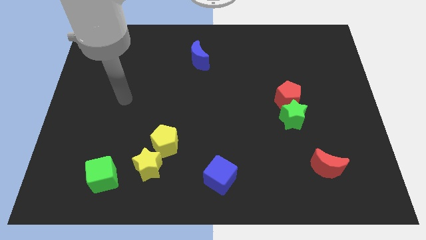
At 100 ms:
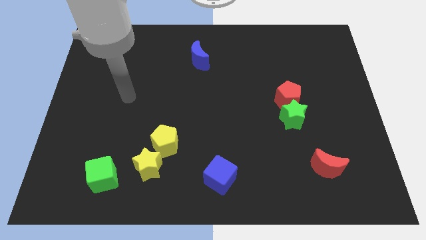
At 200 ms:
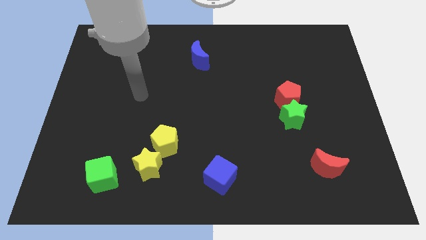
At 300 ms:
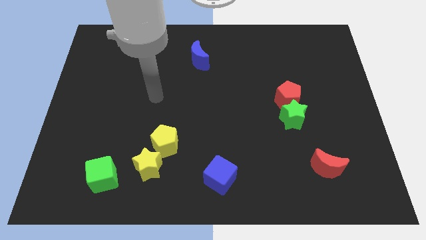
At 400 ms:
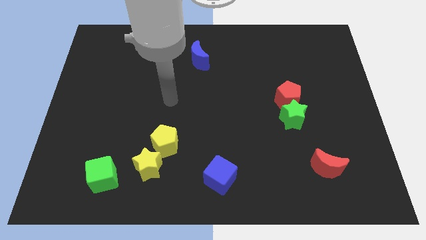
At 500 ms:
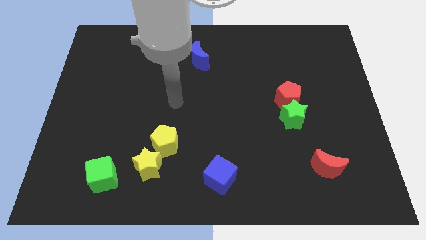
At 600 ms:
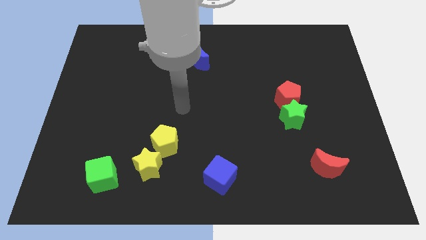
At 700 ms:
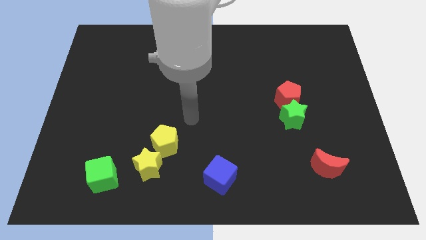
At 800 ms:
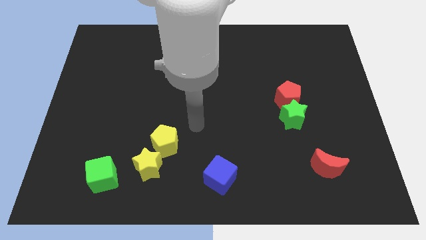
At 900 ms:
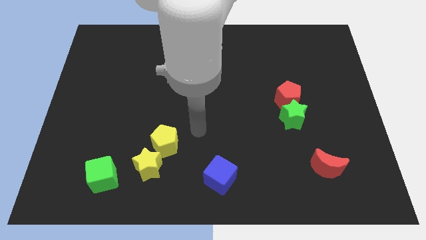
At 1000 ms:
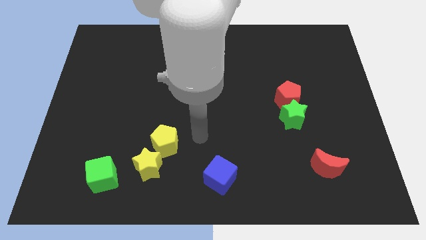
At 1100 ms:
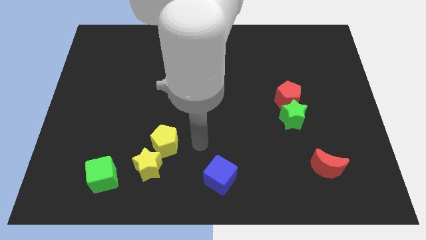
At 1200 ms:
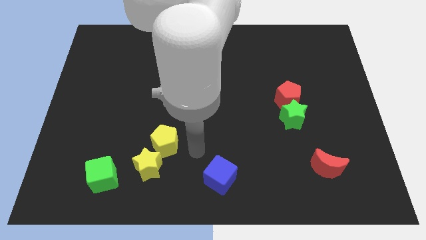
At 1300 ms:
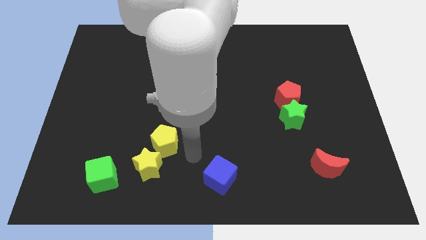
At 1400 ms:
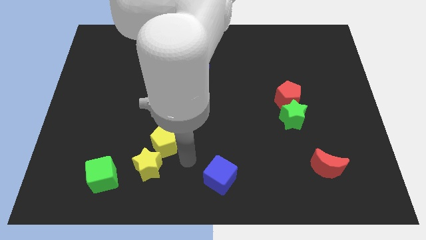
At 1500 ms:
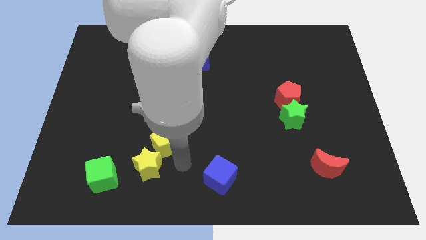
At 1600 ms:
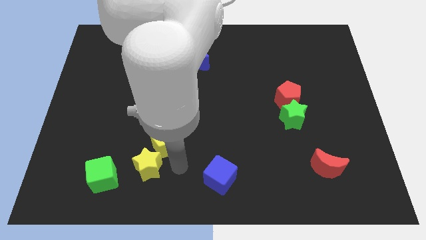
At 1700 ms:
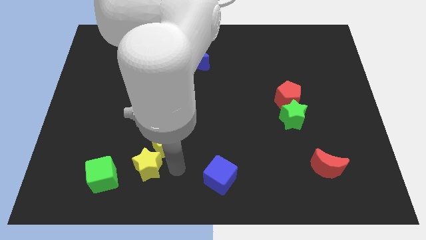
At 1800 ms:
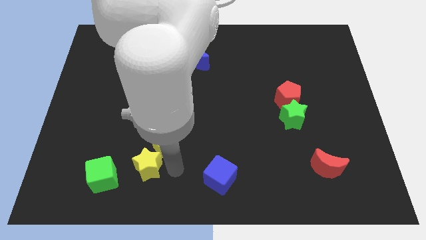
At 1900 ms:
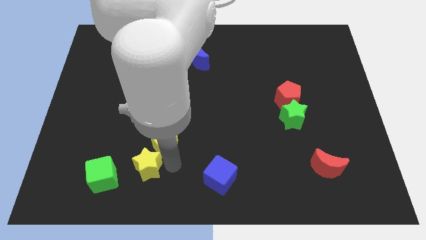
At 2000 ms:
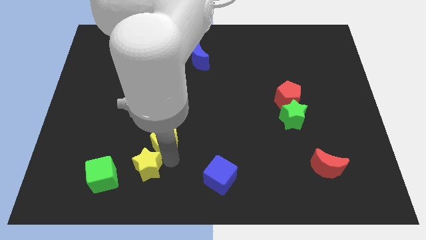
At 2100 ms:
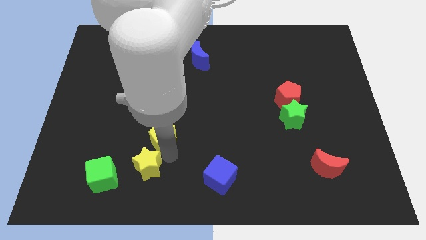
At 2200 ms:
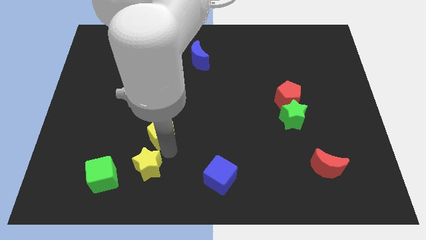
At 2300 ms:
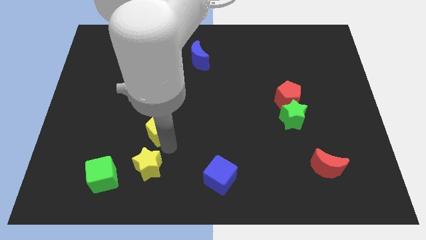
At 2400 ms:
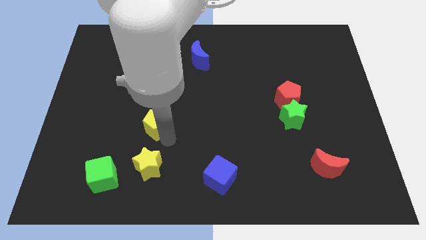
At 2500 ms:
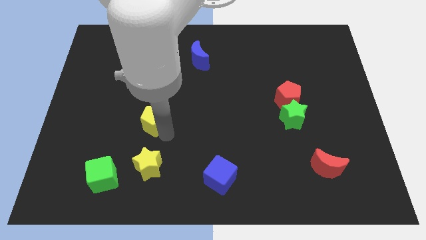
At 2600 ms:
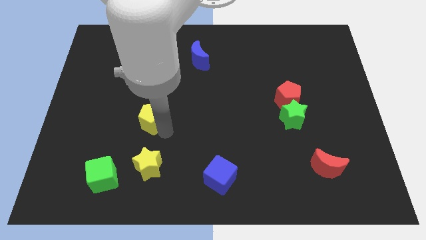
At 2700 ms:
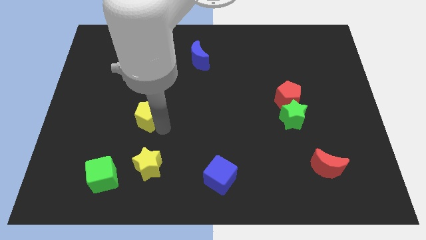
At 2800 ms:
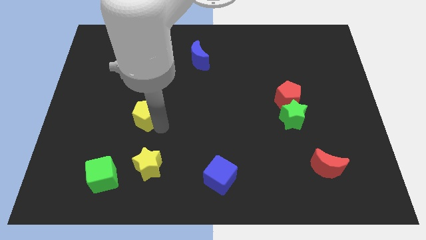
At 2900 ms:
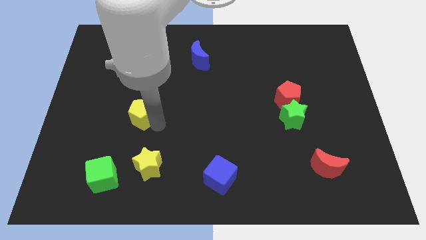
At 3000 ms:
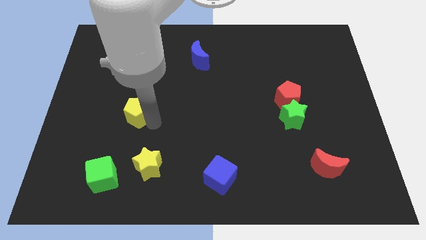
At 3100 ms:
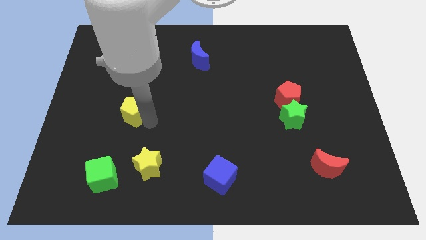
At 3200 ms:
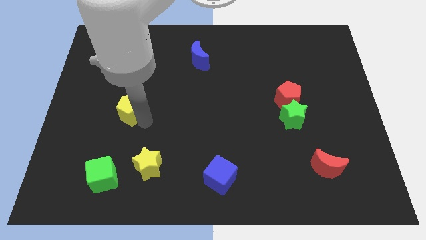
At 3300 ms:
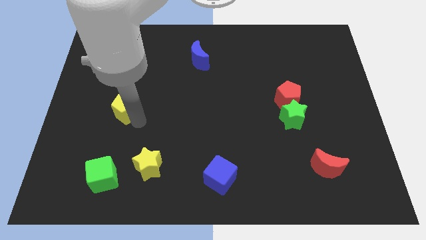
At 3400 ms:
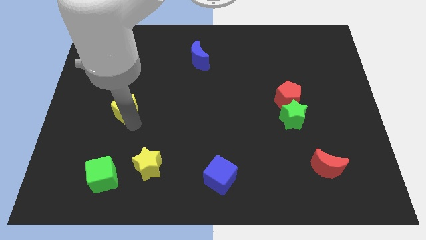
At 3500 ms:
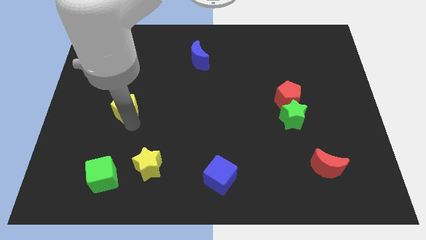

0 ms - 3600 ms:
push the yellow pentagon towards top

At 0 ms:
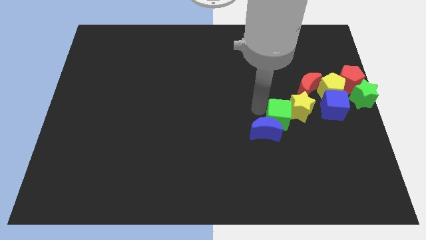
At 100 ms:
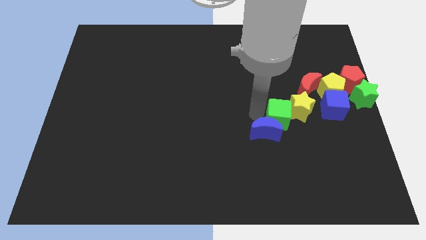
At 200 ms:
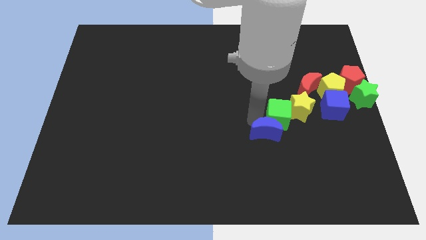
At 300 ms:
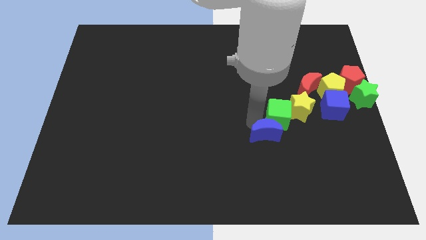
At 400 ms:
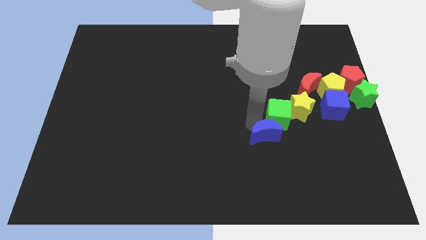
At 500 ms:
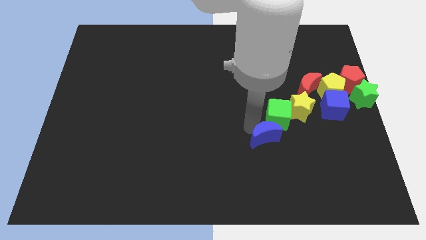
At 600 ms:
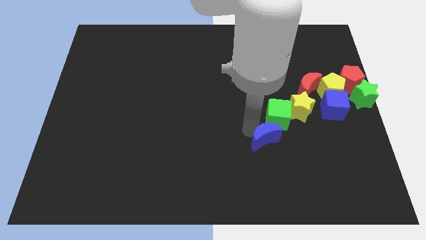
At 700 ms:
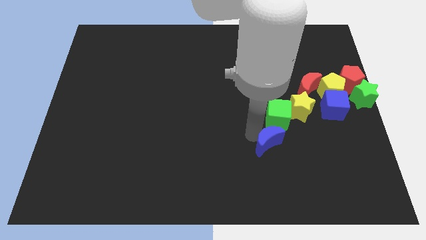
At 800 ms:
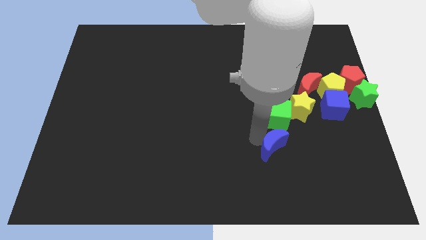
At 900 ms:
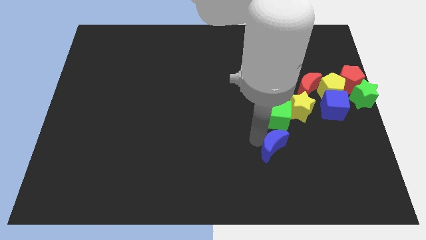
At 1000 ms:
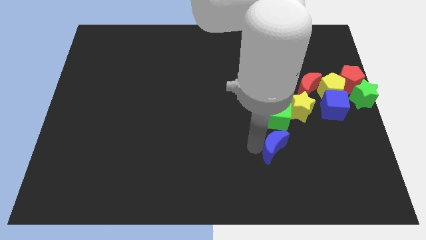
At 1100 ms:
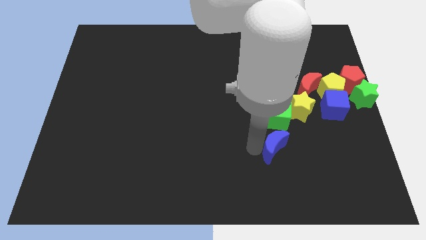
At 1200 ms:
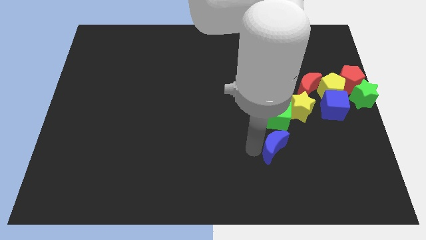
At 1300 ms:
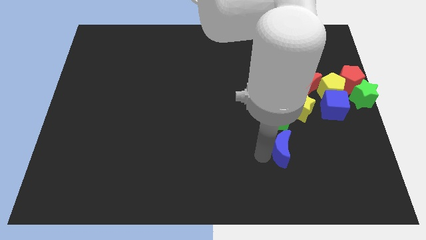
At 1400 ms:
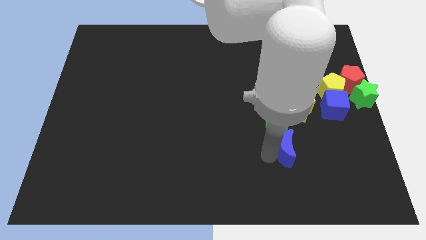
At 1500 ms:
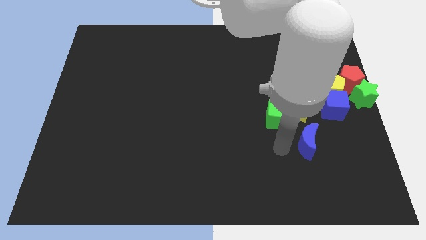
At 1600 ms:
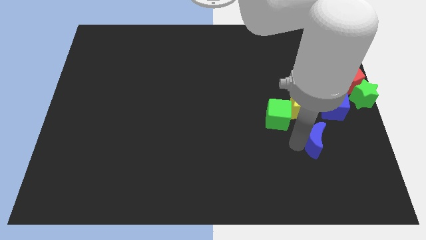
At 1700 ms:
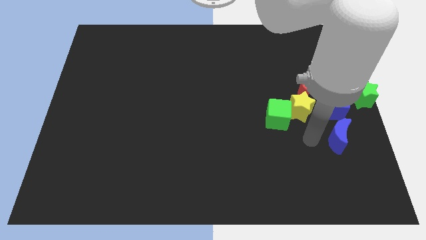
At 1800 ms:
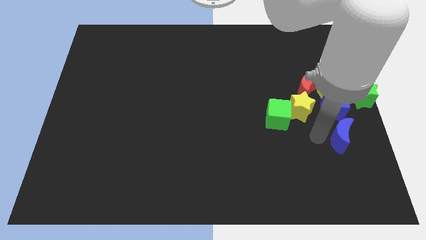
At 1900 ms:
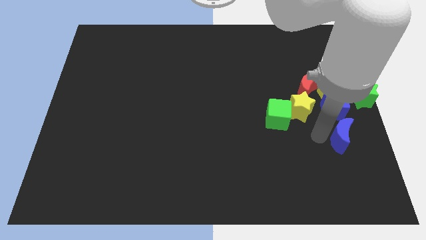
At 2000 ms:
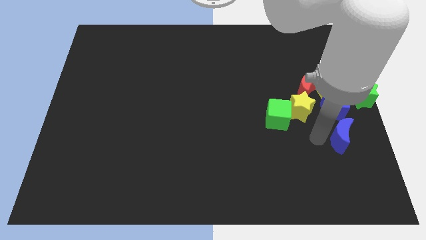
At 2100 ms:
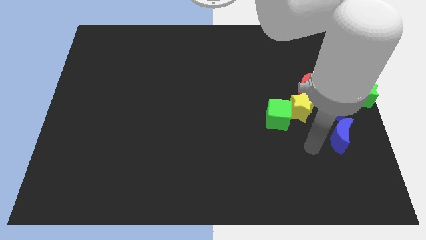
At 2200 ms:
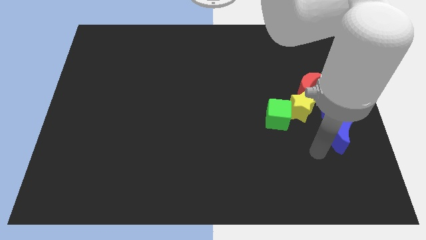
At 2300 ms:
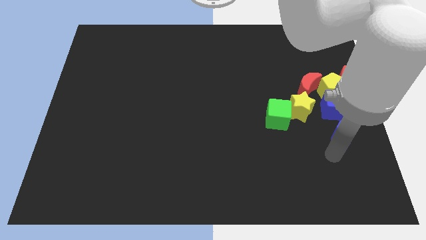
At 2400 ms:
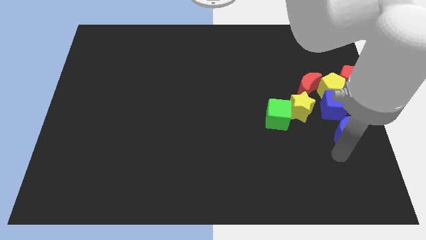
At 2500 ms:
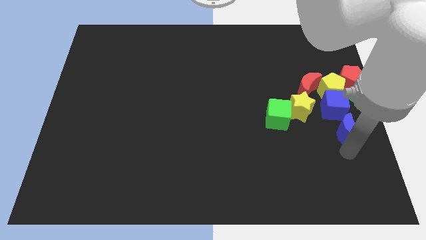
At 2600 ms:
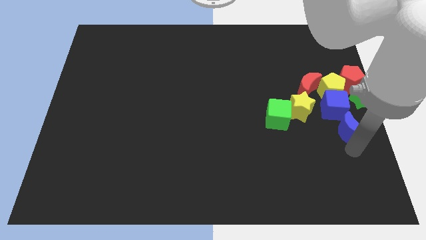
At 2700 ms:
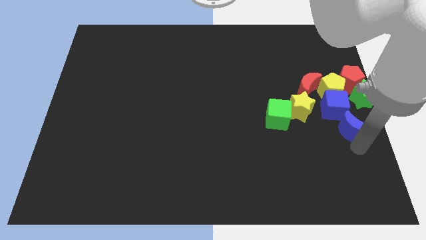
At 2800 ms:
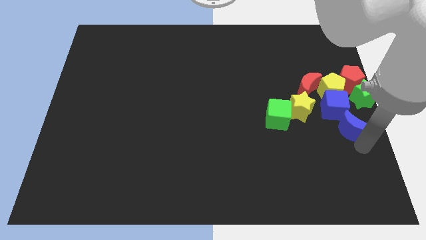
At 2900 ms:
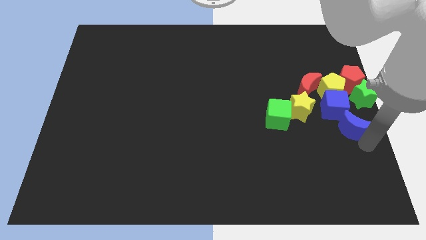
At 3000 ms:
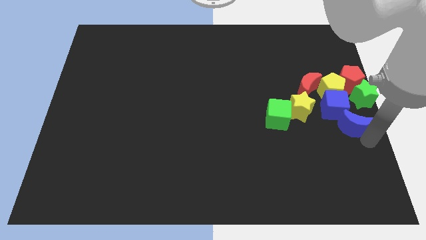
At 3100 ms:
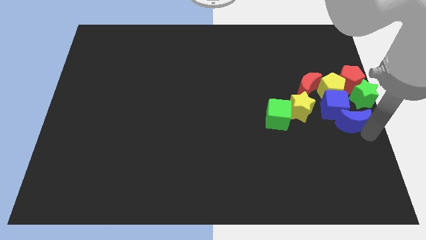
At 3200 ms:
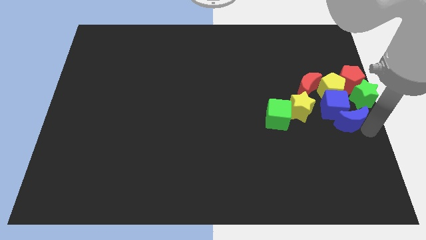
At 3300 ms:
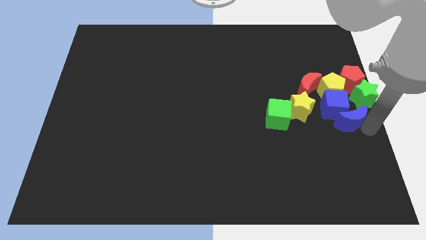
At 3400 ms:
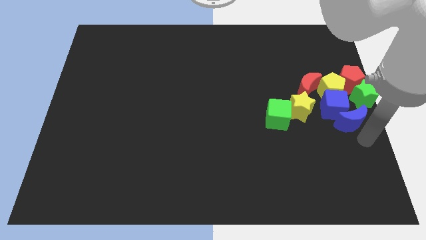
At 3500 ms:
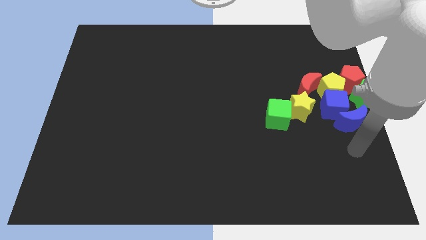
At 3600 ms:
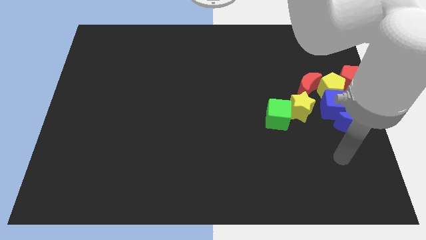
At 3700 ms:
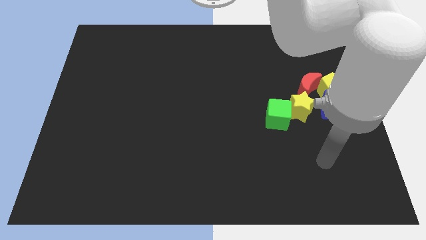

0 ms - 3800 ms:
push the blue moon into blue cube

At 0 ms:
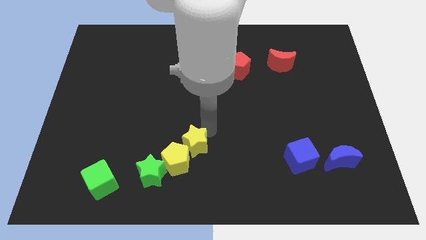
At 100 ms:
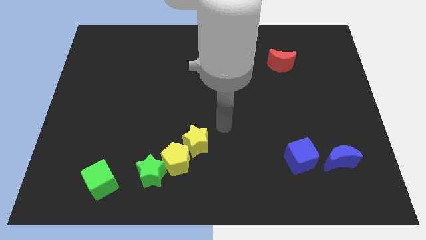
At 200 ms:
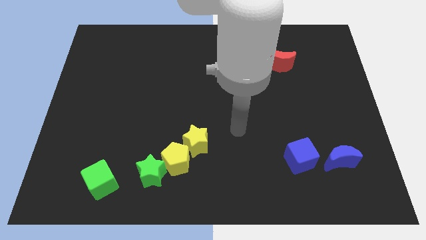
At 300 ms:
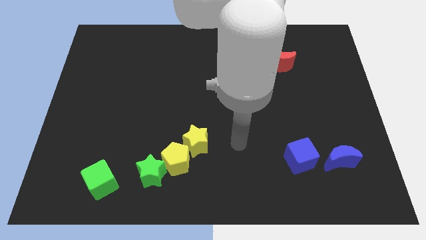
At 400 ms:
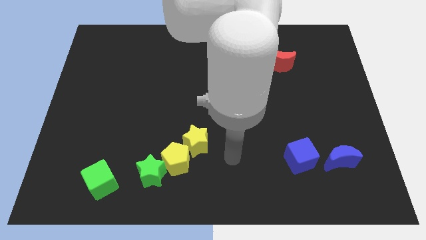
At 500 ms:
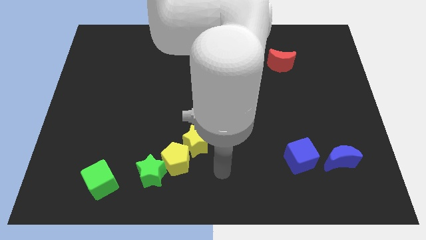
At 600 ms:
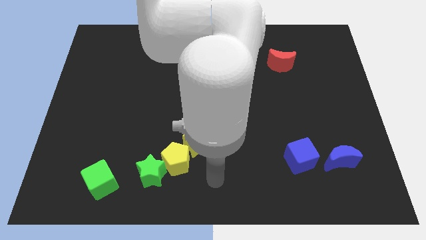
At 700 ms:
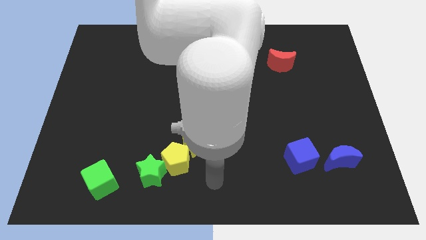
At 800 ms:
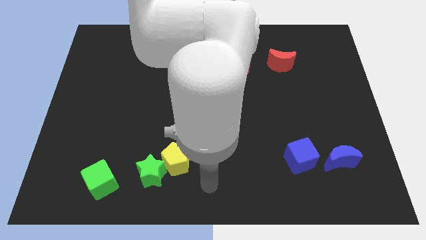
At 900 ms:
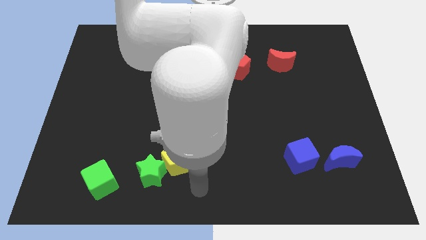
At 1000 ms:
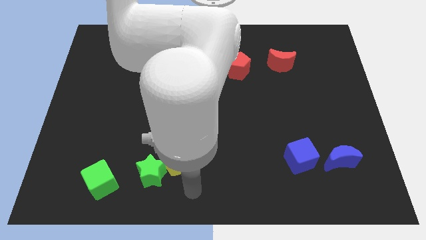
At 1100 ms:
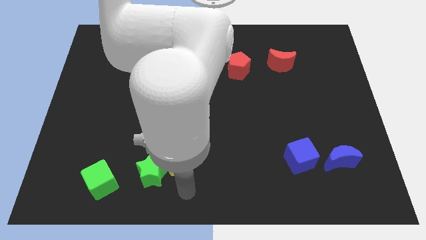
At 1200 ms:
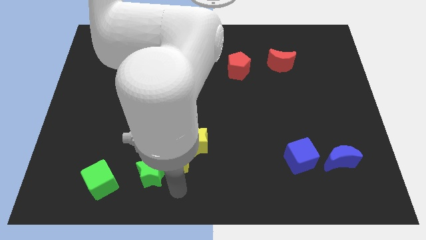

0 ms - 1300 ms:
place your arm at the bottom of the yellow pentagon

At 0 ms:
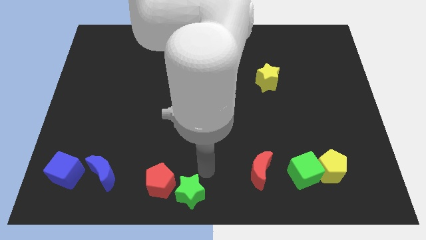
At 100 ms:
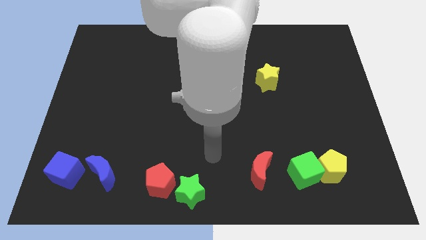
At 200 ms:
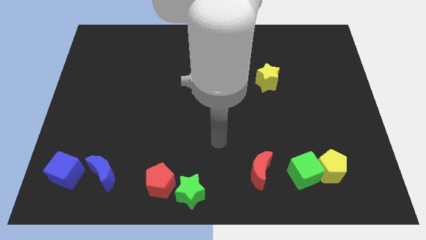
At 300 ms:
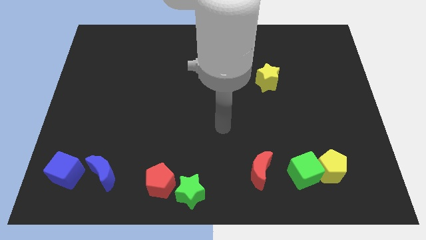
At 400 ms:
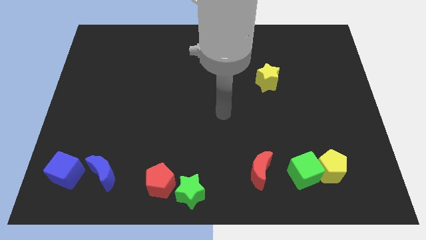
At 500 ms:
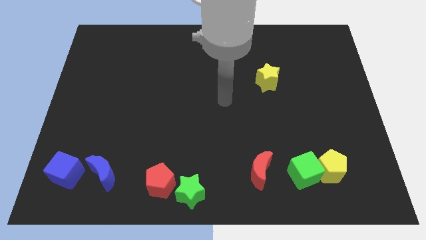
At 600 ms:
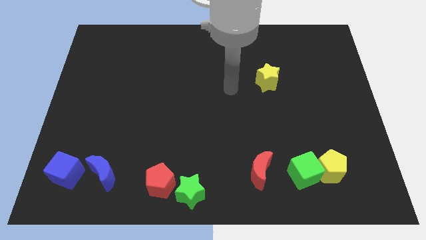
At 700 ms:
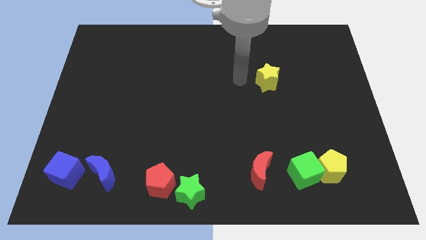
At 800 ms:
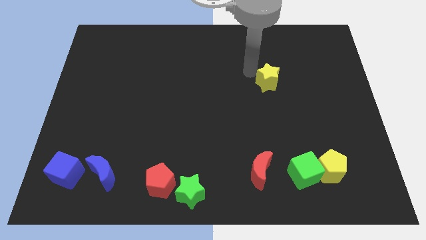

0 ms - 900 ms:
place the arm close to the yellow star
